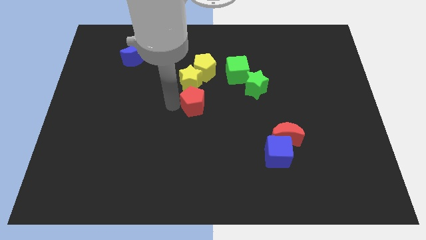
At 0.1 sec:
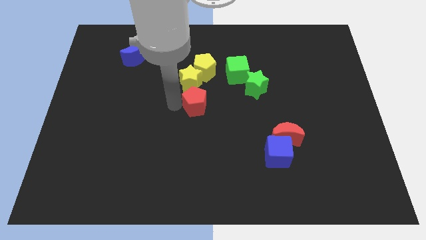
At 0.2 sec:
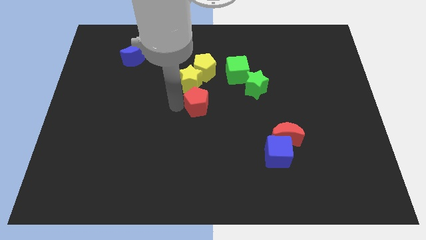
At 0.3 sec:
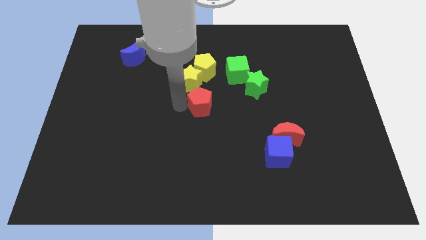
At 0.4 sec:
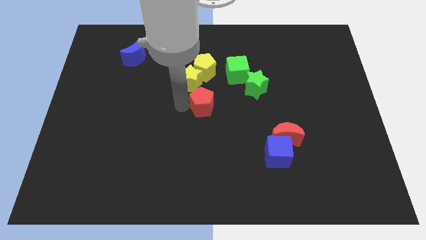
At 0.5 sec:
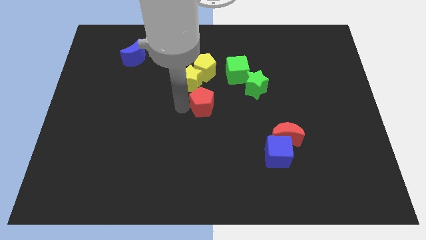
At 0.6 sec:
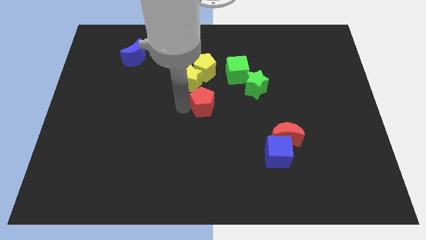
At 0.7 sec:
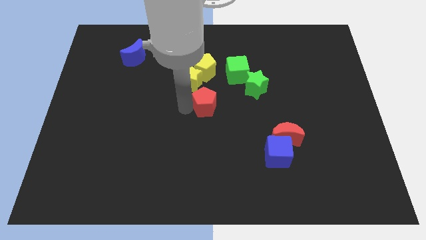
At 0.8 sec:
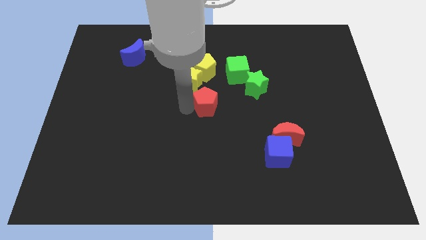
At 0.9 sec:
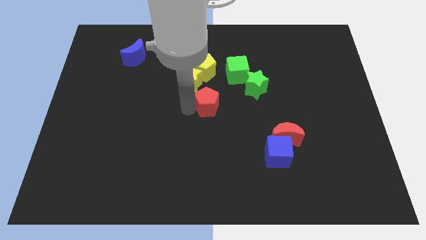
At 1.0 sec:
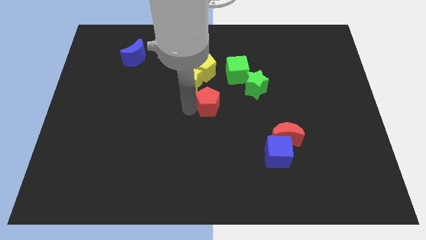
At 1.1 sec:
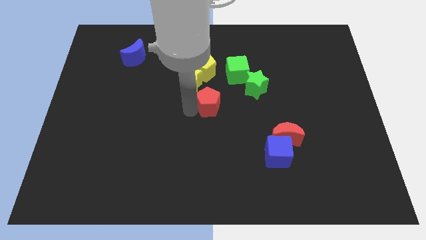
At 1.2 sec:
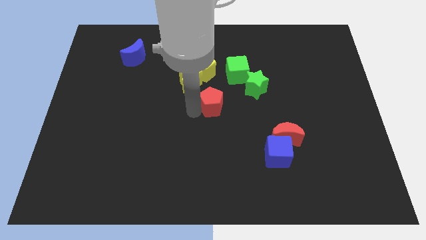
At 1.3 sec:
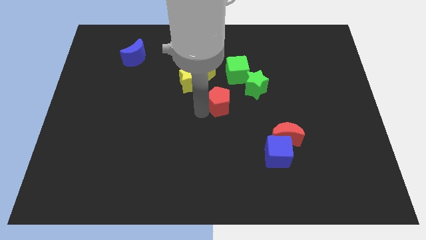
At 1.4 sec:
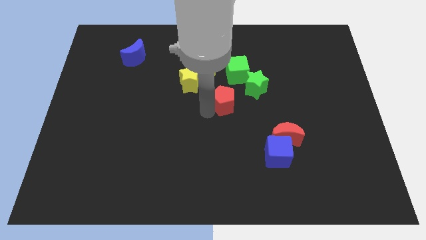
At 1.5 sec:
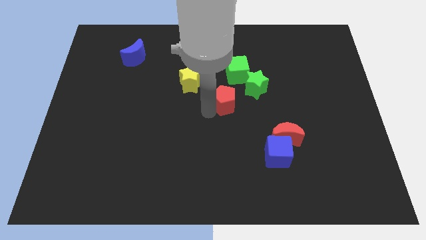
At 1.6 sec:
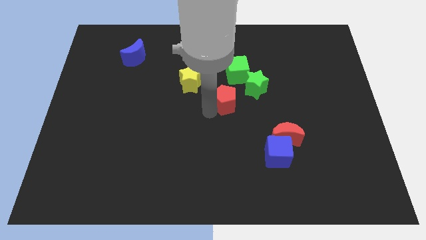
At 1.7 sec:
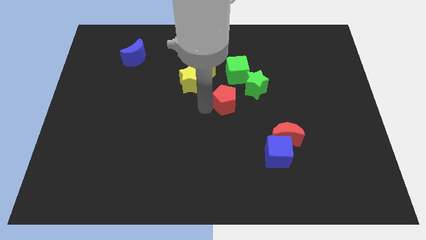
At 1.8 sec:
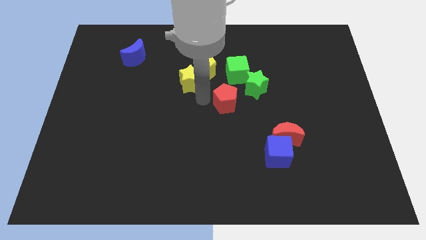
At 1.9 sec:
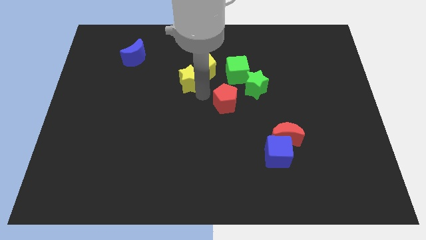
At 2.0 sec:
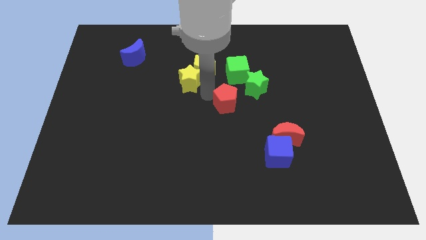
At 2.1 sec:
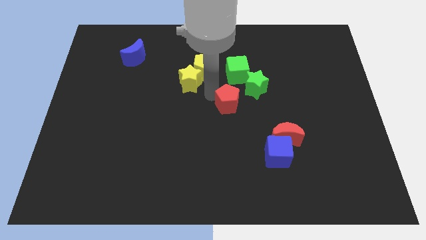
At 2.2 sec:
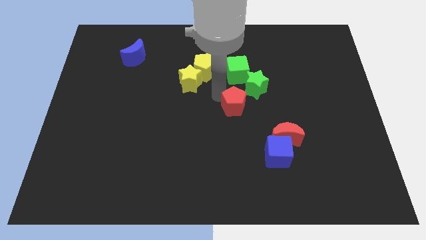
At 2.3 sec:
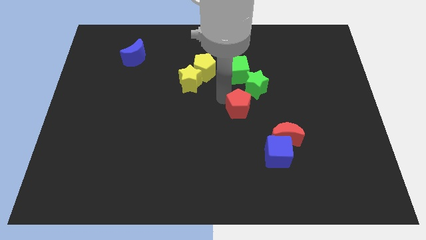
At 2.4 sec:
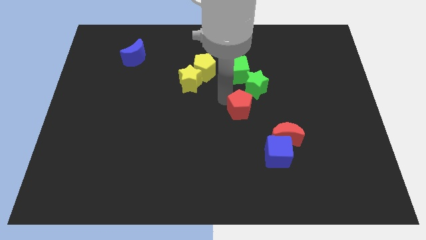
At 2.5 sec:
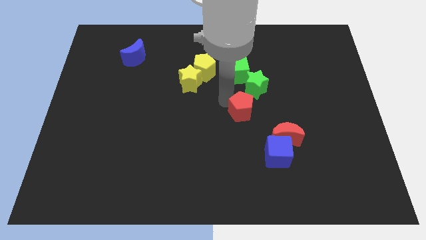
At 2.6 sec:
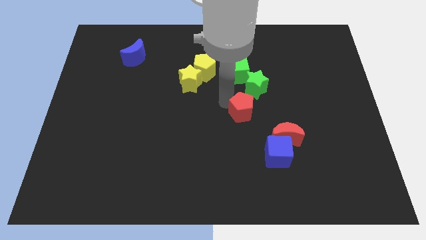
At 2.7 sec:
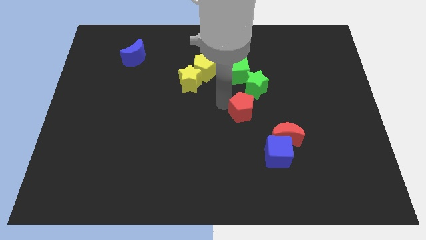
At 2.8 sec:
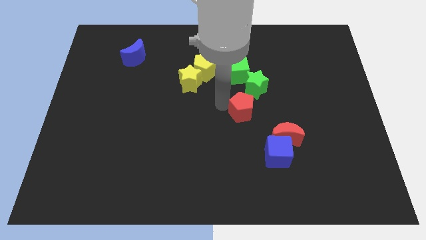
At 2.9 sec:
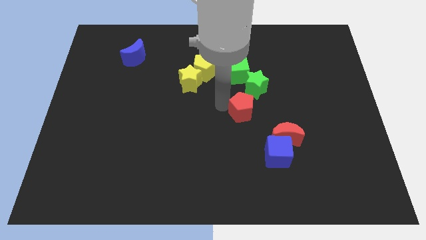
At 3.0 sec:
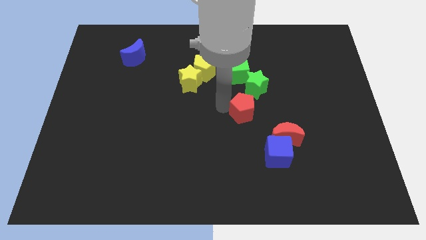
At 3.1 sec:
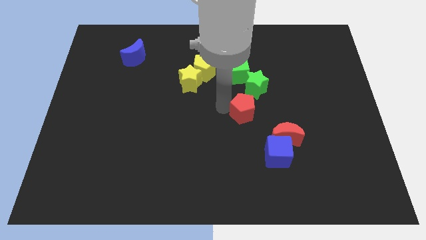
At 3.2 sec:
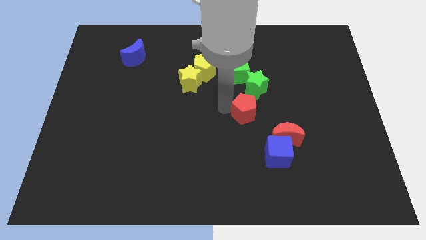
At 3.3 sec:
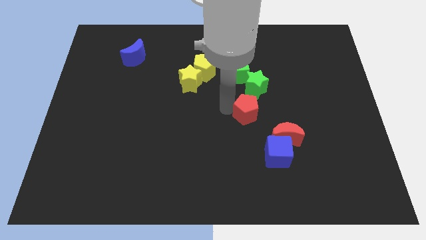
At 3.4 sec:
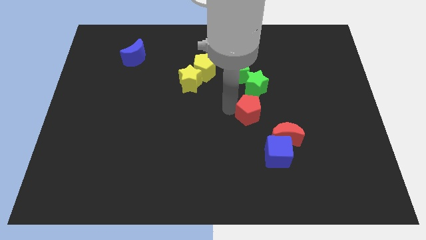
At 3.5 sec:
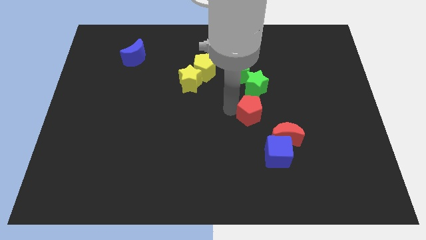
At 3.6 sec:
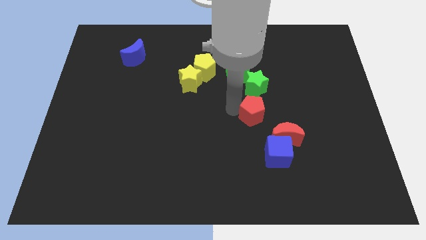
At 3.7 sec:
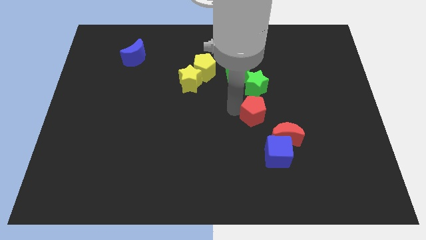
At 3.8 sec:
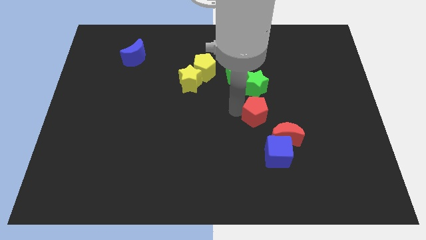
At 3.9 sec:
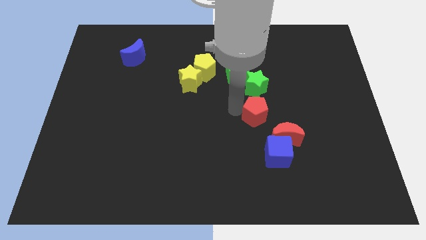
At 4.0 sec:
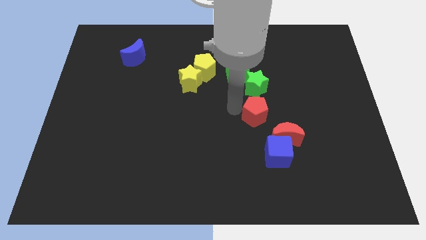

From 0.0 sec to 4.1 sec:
push the red pentagon to the bottom of the green star

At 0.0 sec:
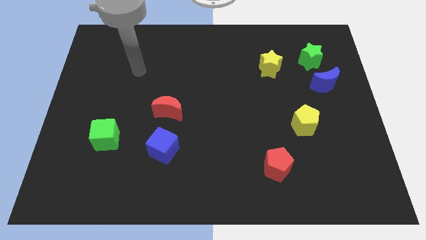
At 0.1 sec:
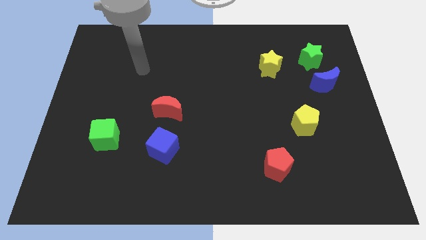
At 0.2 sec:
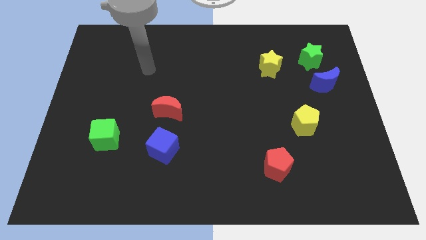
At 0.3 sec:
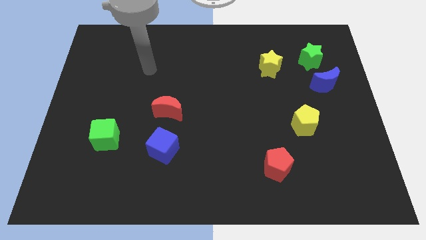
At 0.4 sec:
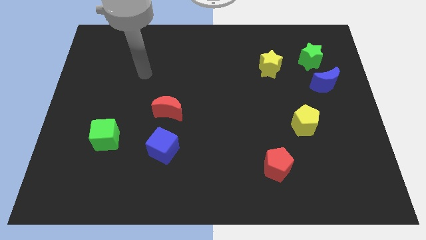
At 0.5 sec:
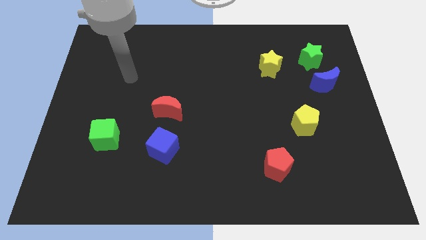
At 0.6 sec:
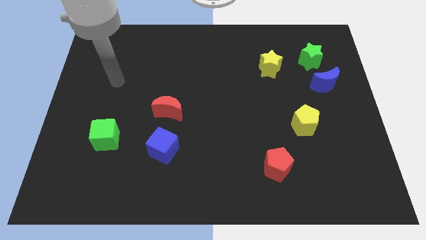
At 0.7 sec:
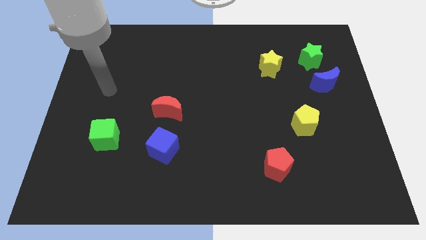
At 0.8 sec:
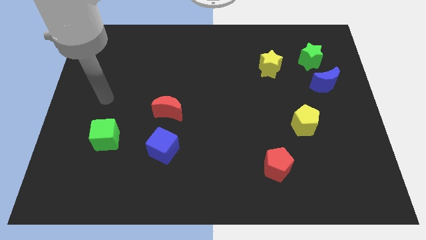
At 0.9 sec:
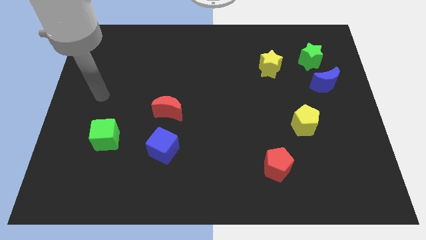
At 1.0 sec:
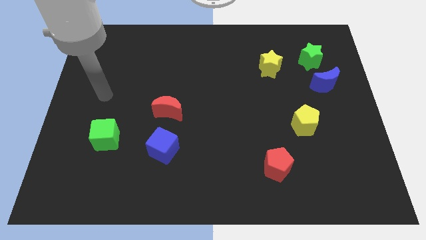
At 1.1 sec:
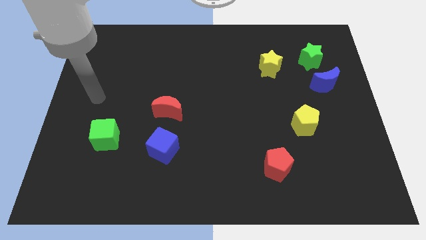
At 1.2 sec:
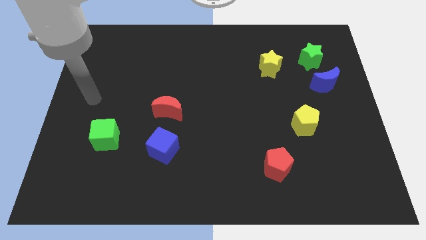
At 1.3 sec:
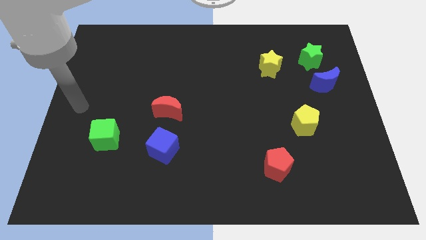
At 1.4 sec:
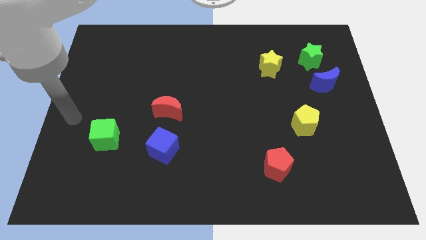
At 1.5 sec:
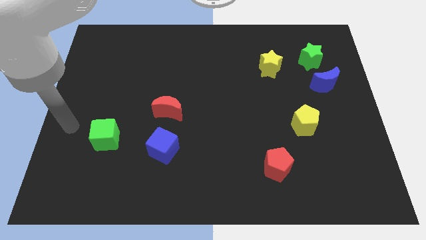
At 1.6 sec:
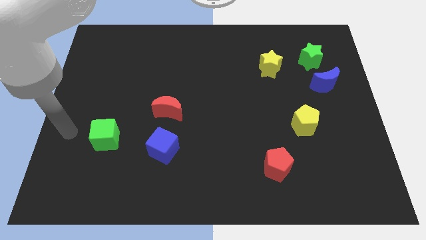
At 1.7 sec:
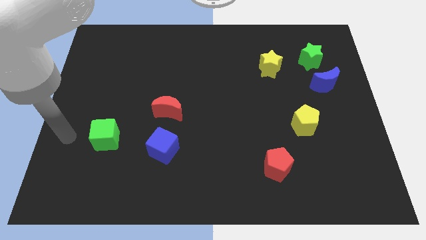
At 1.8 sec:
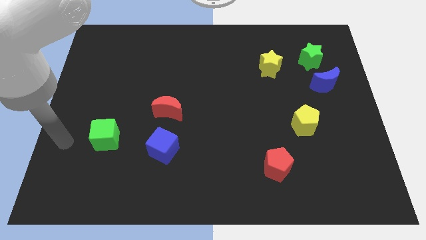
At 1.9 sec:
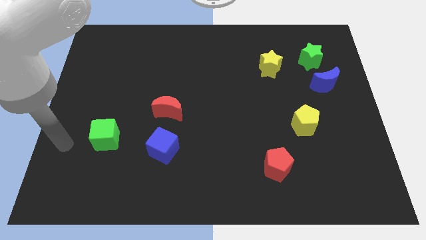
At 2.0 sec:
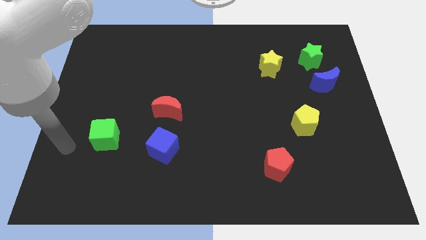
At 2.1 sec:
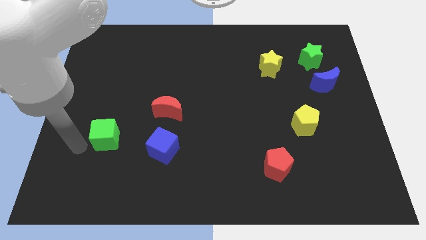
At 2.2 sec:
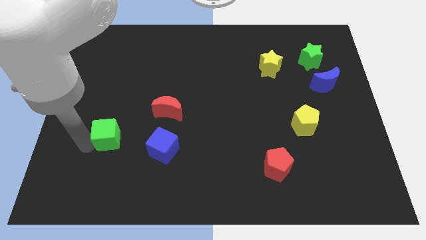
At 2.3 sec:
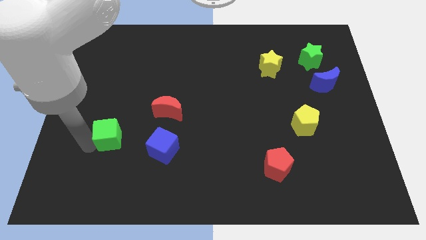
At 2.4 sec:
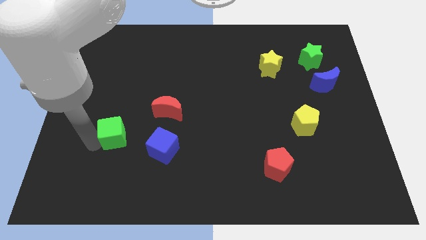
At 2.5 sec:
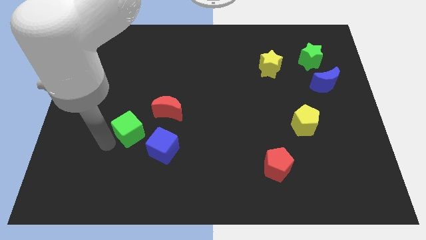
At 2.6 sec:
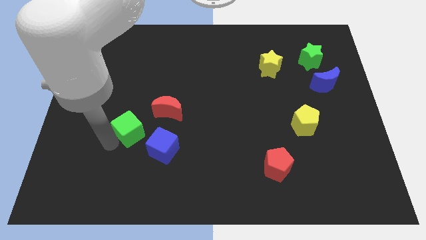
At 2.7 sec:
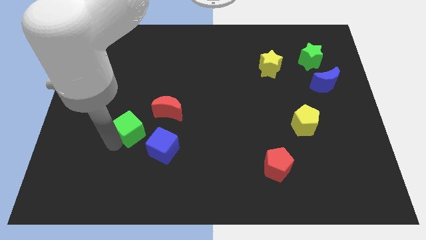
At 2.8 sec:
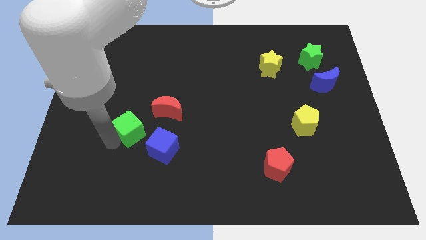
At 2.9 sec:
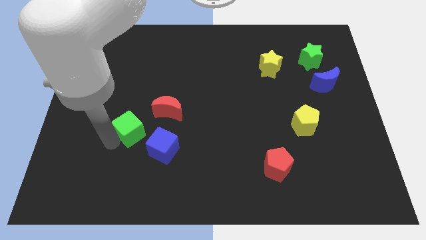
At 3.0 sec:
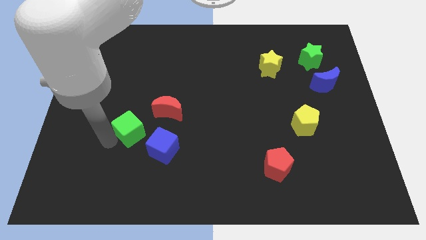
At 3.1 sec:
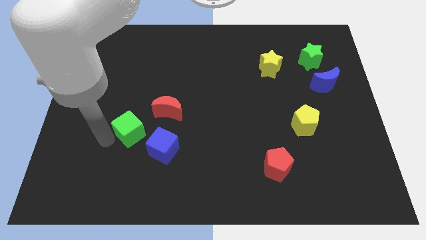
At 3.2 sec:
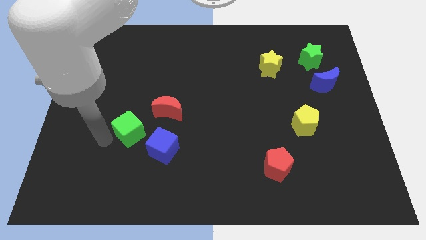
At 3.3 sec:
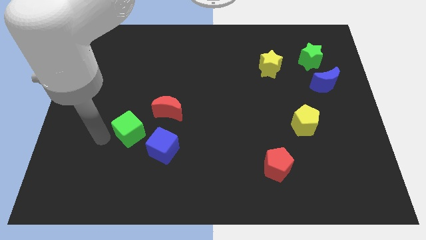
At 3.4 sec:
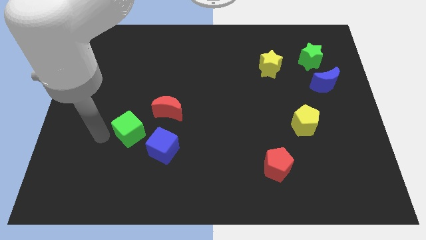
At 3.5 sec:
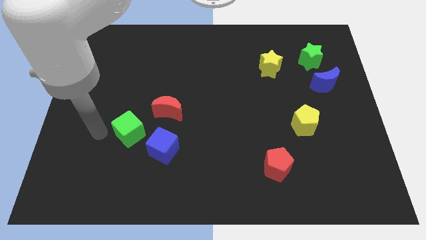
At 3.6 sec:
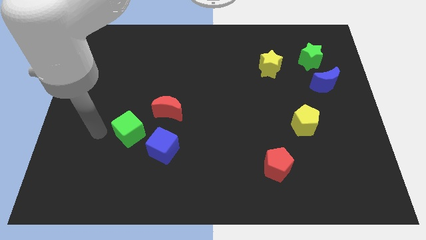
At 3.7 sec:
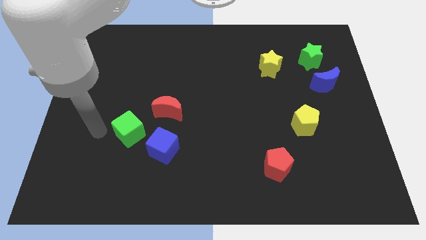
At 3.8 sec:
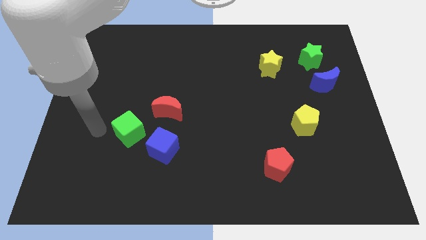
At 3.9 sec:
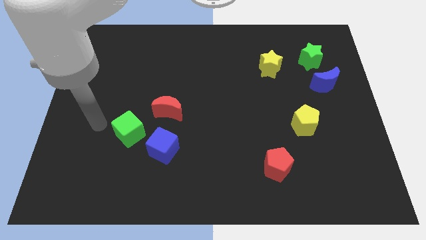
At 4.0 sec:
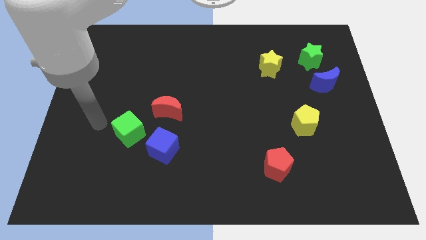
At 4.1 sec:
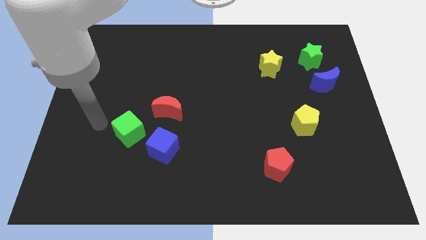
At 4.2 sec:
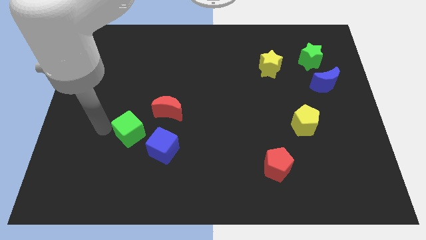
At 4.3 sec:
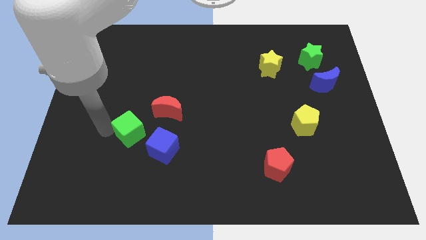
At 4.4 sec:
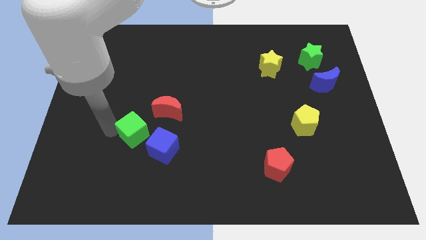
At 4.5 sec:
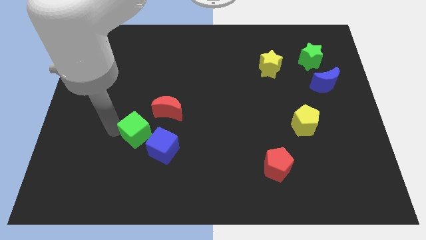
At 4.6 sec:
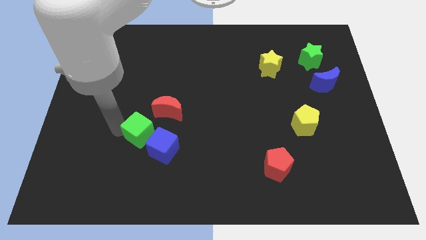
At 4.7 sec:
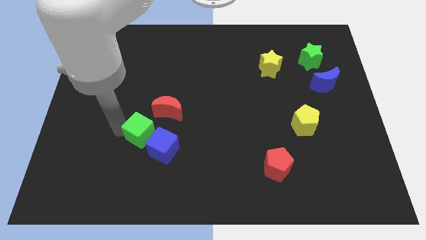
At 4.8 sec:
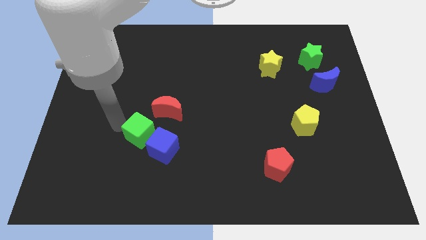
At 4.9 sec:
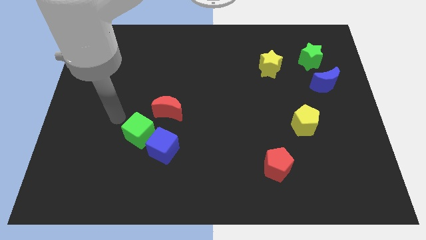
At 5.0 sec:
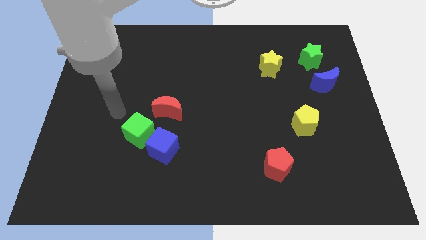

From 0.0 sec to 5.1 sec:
slide green cube into blue cube
